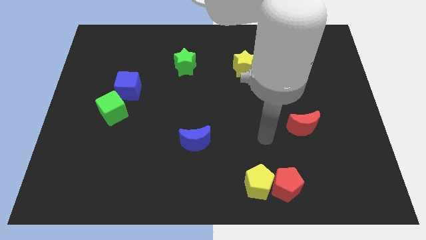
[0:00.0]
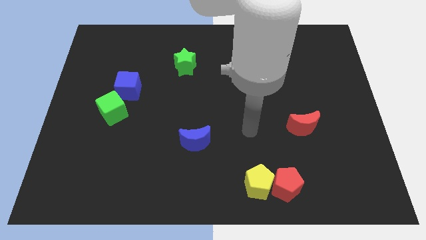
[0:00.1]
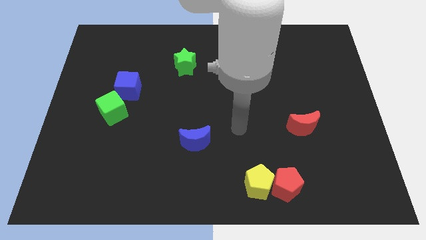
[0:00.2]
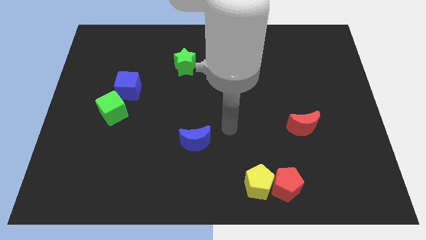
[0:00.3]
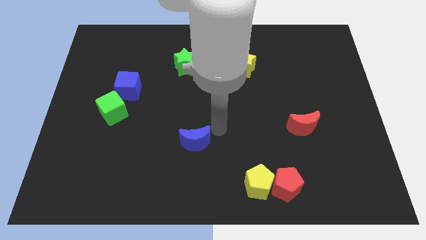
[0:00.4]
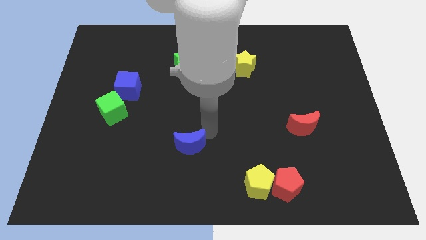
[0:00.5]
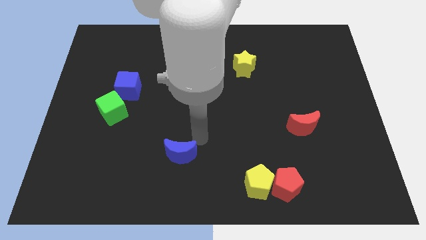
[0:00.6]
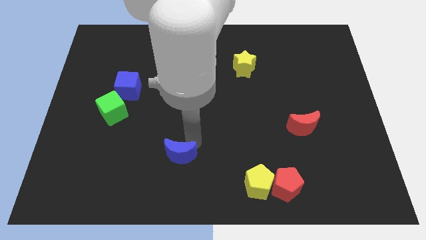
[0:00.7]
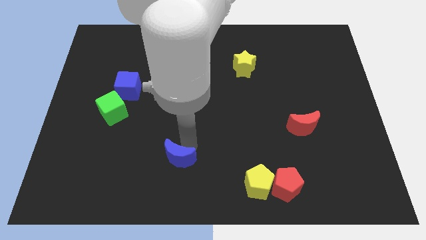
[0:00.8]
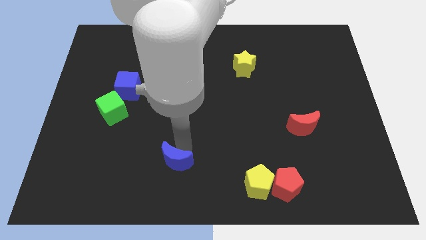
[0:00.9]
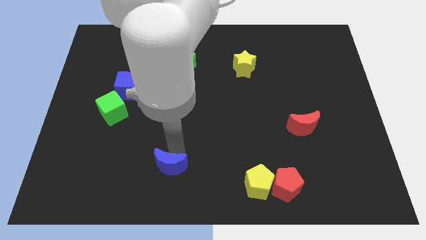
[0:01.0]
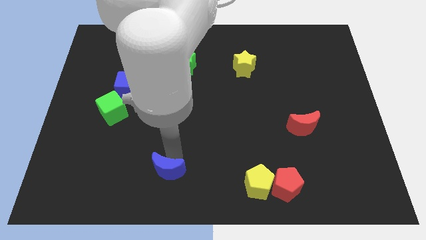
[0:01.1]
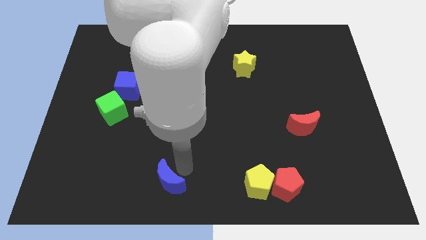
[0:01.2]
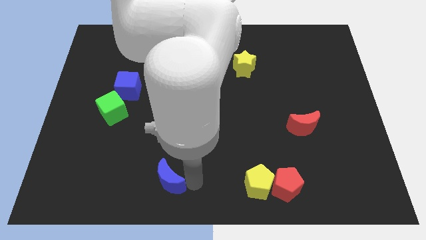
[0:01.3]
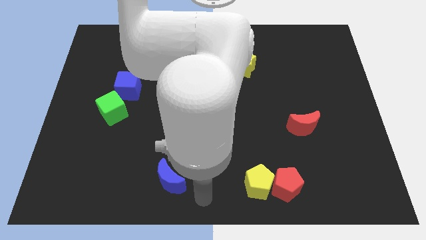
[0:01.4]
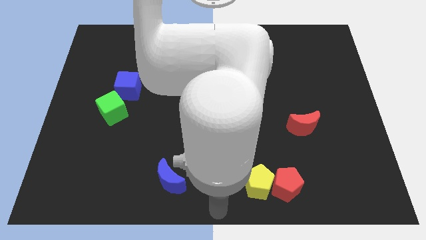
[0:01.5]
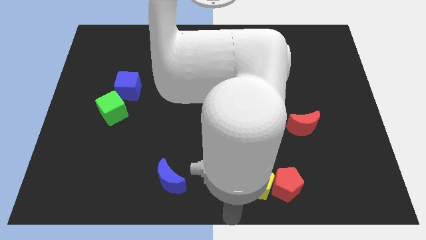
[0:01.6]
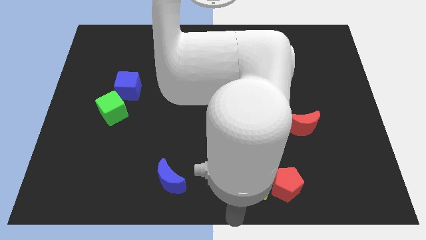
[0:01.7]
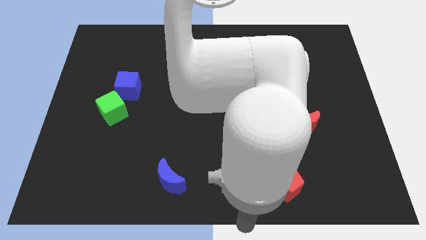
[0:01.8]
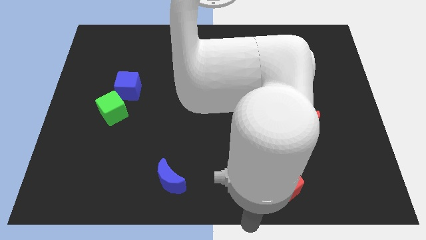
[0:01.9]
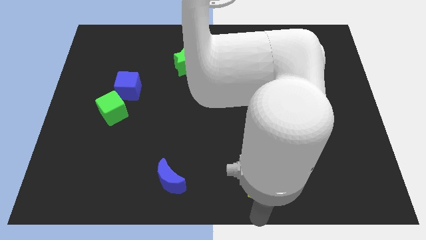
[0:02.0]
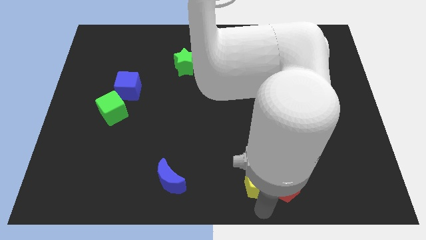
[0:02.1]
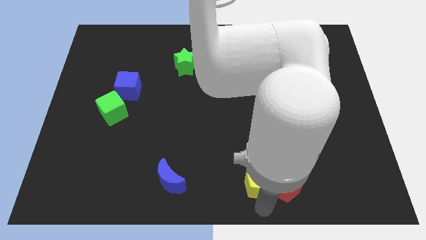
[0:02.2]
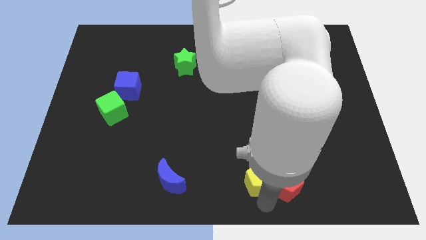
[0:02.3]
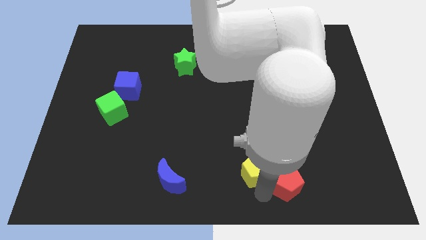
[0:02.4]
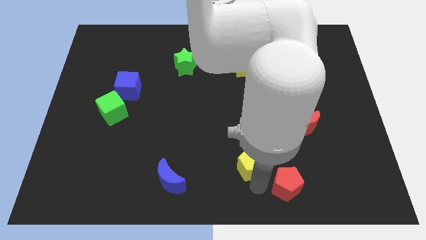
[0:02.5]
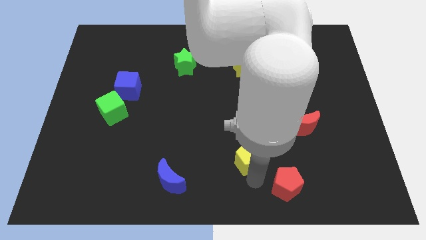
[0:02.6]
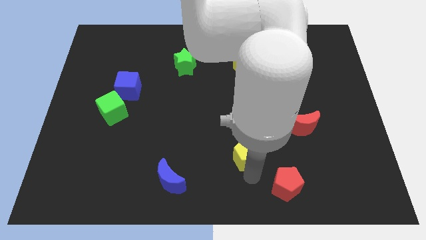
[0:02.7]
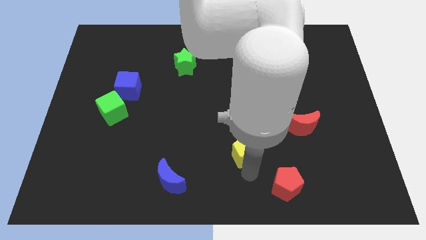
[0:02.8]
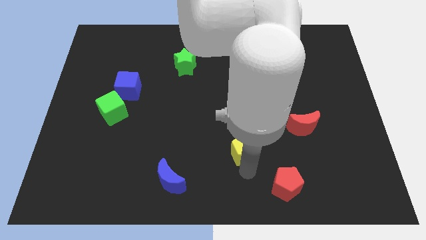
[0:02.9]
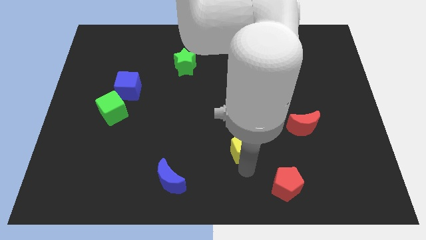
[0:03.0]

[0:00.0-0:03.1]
place the blue crescent and yellow pentagon diagonally at the bottom left of the red crescent

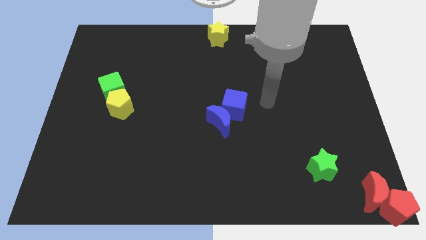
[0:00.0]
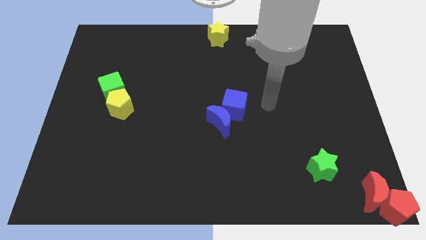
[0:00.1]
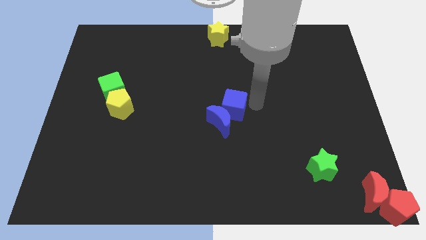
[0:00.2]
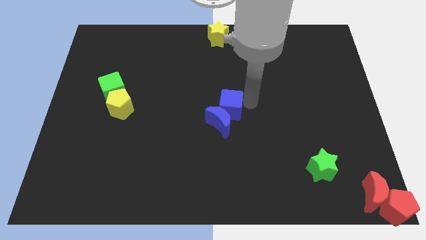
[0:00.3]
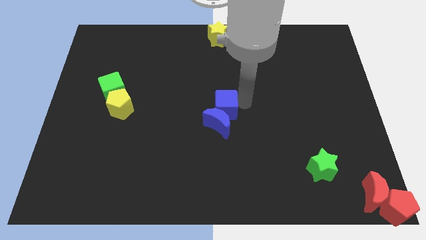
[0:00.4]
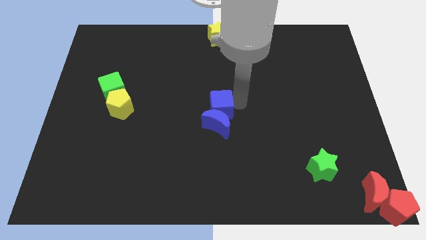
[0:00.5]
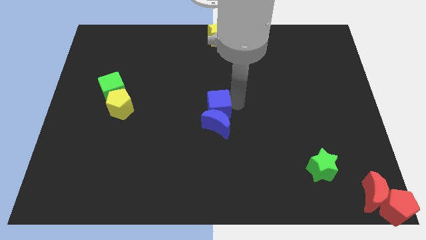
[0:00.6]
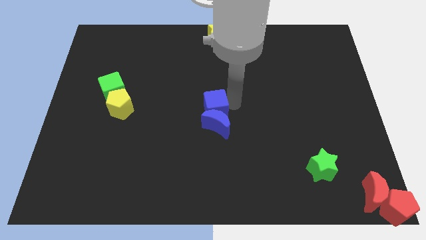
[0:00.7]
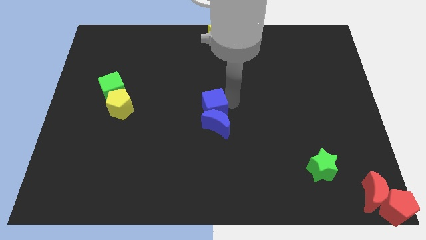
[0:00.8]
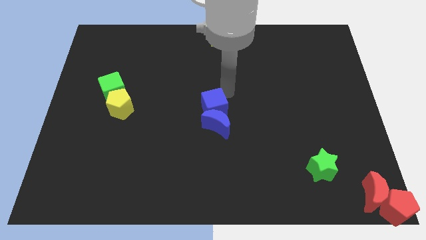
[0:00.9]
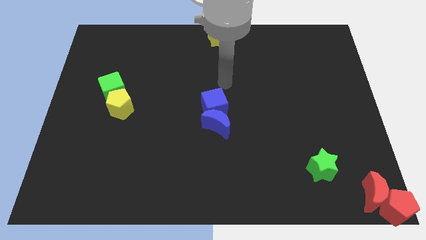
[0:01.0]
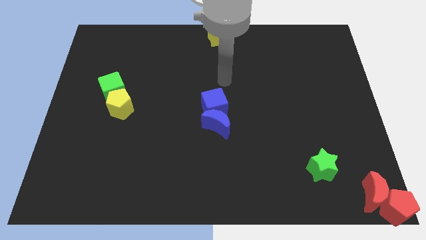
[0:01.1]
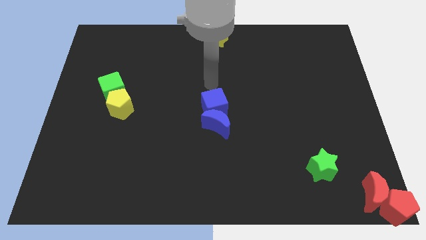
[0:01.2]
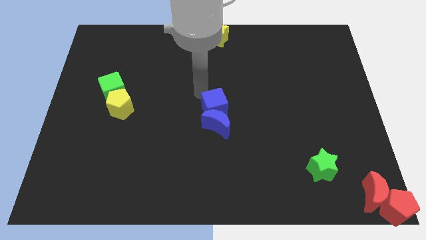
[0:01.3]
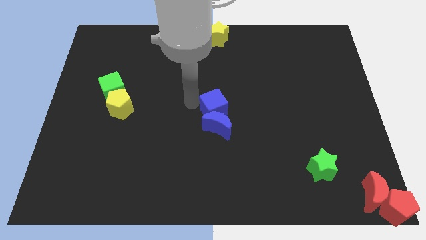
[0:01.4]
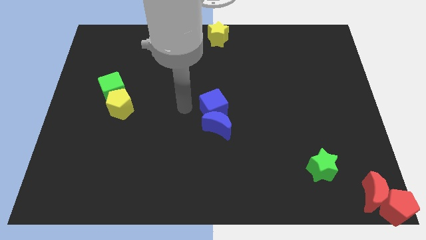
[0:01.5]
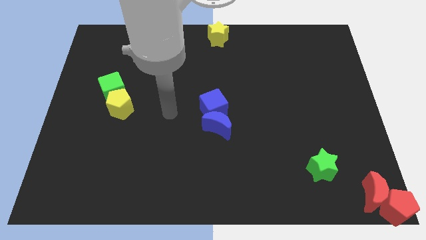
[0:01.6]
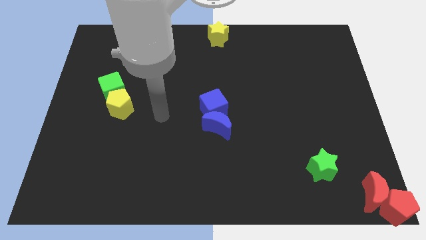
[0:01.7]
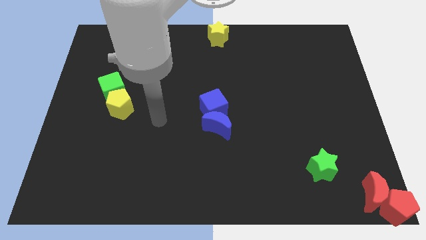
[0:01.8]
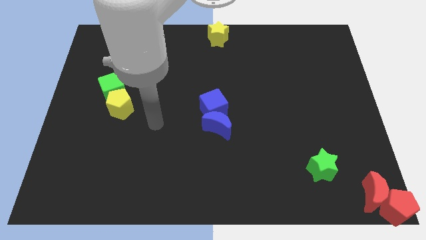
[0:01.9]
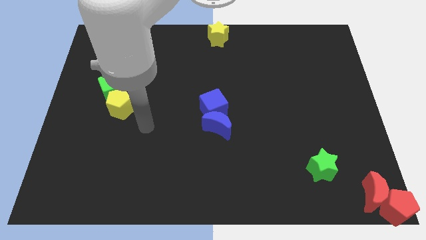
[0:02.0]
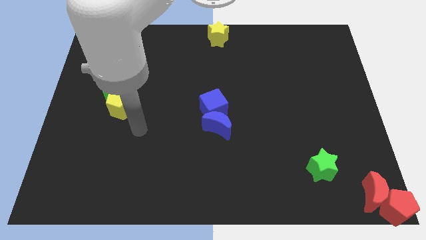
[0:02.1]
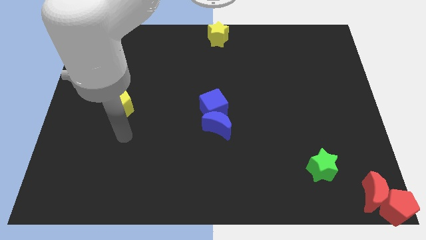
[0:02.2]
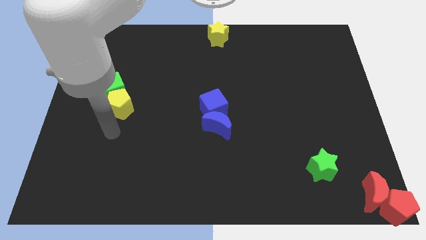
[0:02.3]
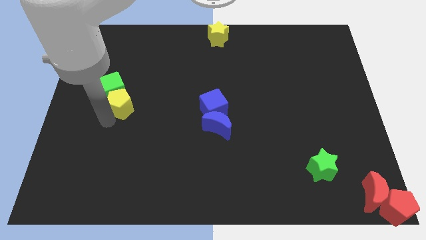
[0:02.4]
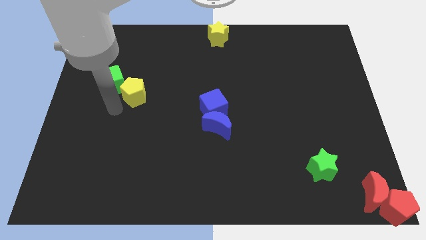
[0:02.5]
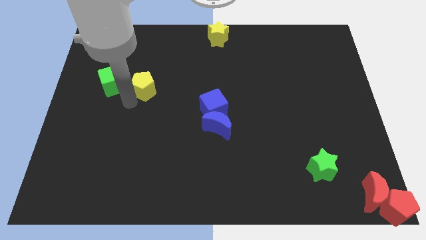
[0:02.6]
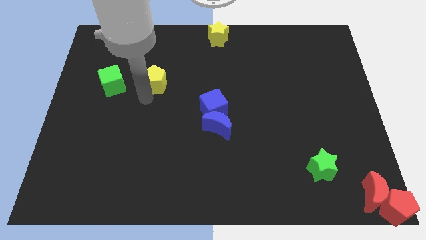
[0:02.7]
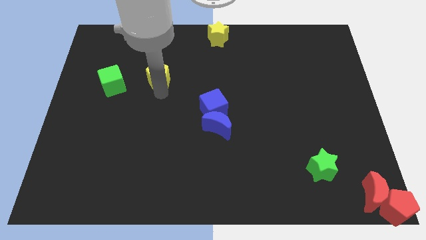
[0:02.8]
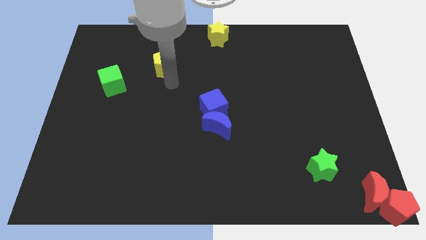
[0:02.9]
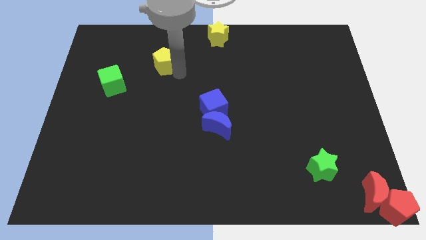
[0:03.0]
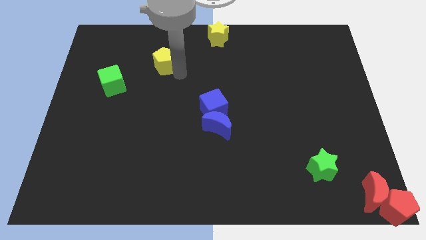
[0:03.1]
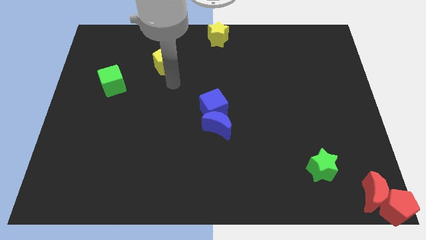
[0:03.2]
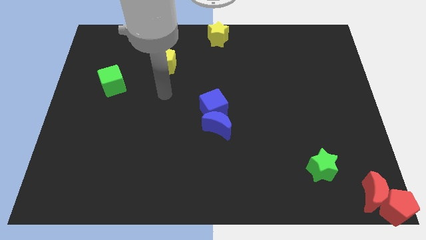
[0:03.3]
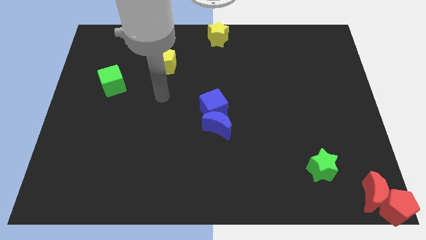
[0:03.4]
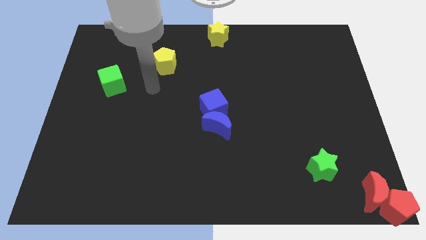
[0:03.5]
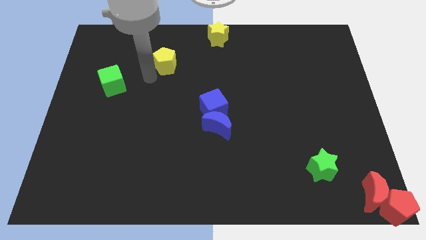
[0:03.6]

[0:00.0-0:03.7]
move the yellow pentagon towards the yellow star

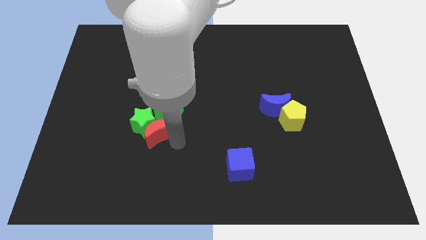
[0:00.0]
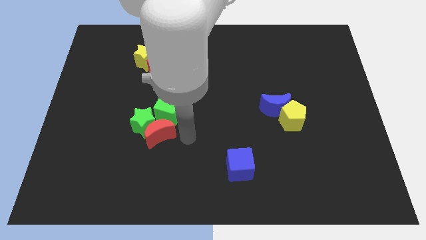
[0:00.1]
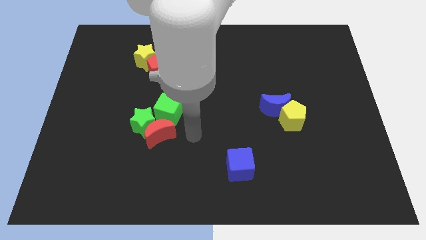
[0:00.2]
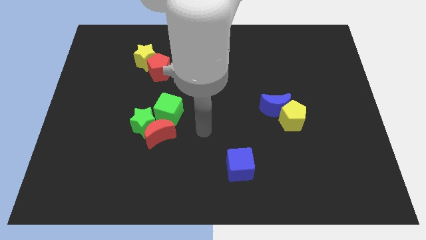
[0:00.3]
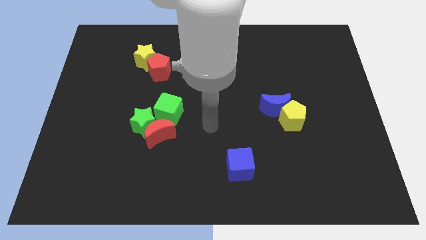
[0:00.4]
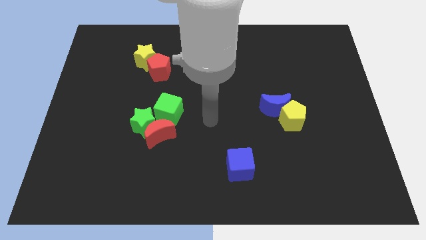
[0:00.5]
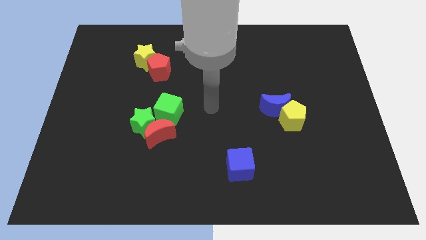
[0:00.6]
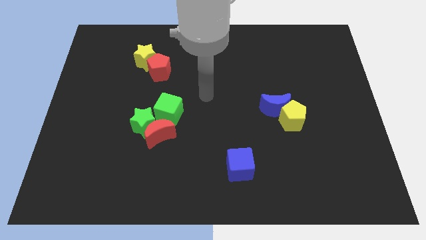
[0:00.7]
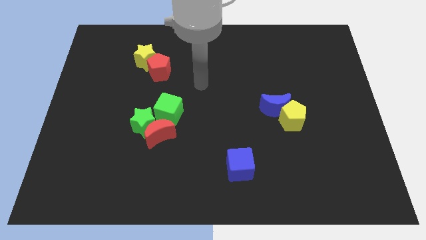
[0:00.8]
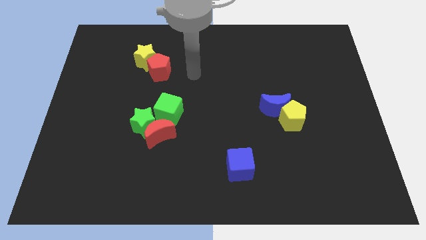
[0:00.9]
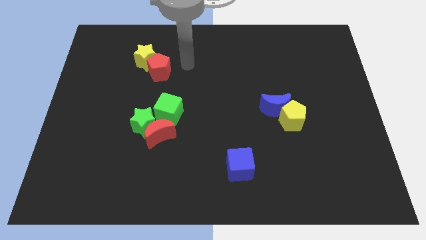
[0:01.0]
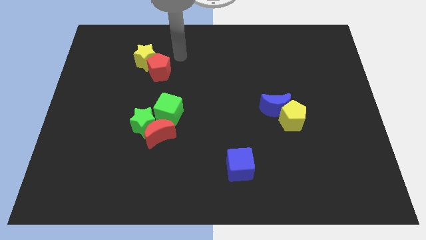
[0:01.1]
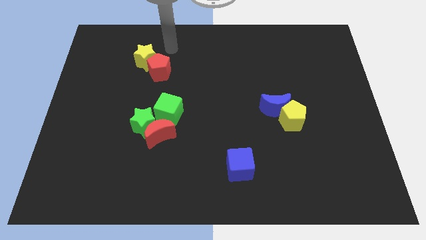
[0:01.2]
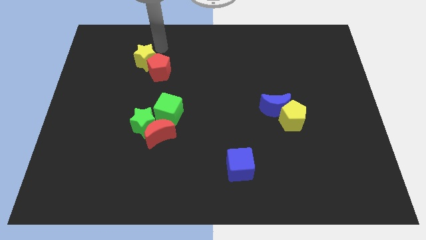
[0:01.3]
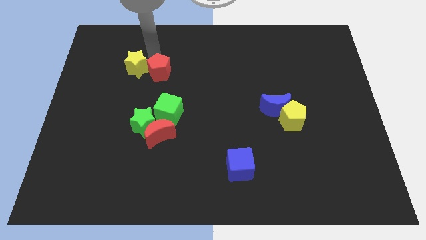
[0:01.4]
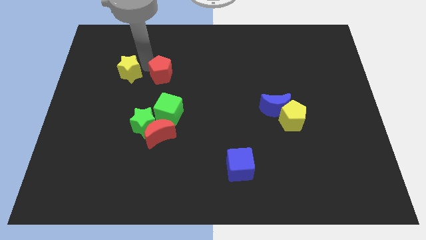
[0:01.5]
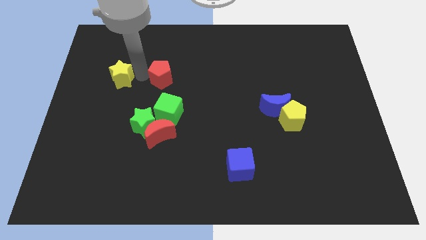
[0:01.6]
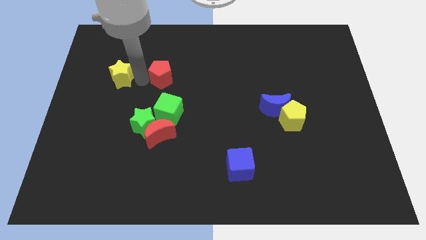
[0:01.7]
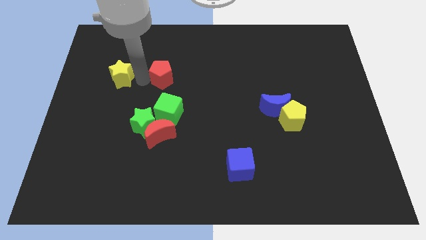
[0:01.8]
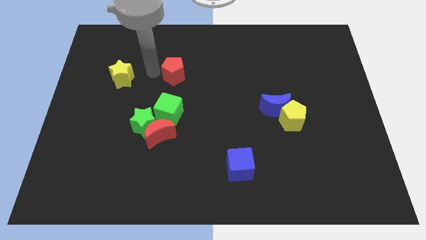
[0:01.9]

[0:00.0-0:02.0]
separate yellow star and the red pentagon

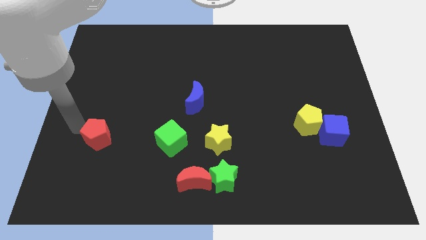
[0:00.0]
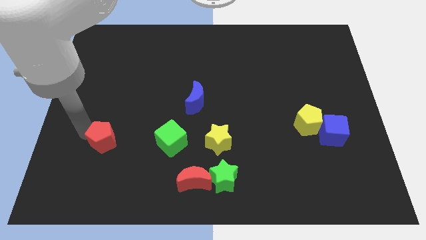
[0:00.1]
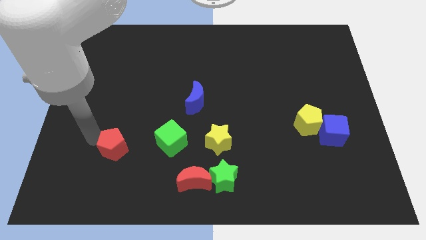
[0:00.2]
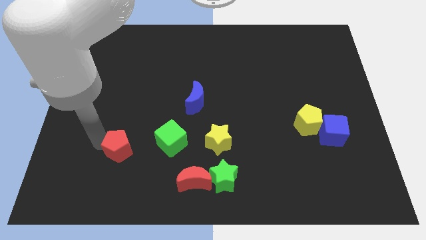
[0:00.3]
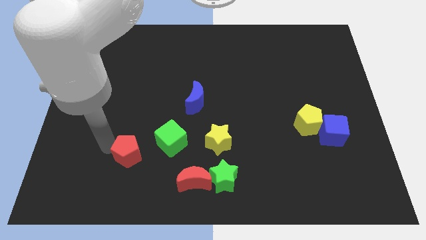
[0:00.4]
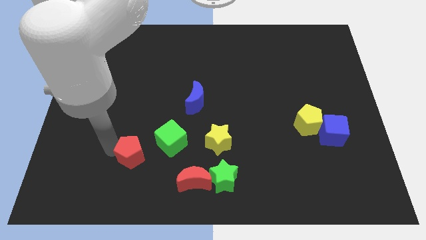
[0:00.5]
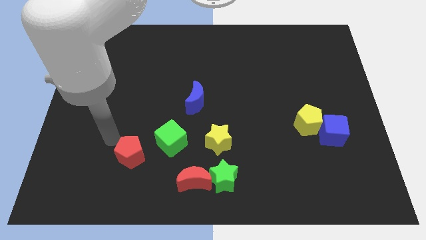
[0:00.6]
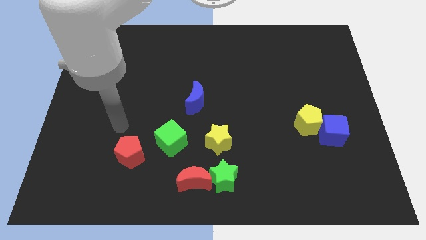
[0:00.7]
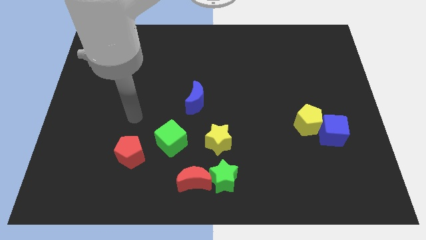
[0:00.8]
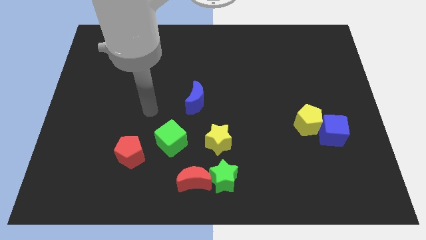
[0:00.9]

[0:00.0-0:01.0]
place red pentagon left to the green cube
